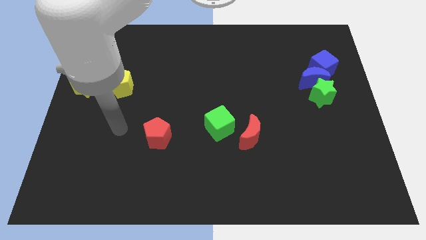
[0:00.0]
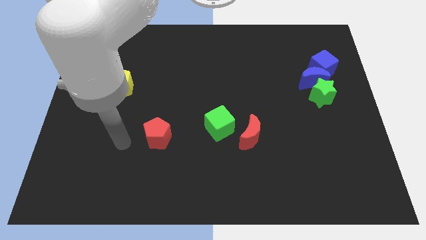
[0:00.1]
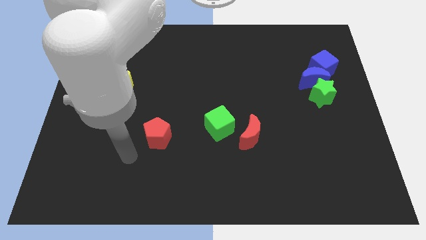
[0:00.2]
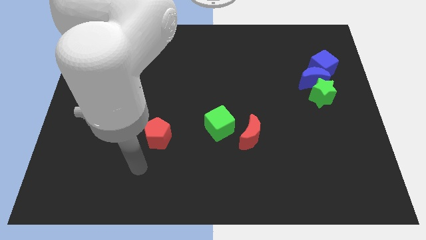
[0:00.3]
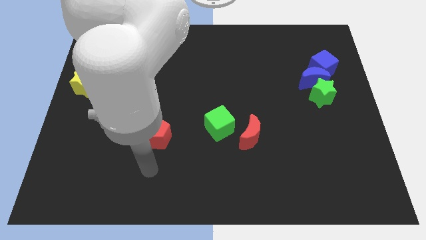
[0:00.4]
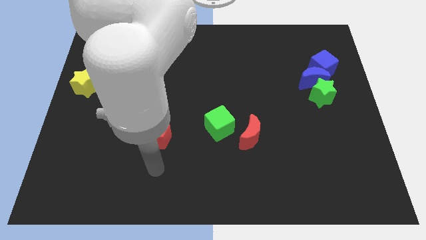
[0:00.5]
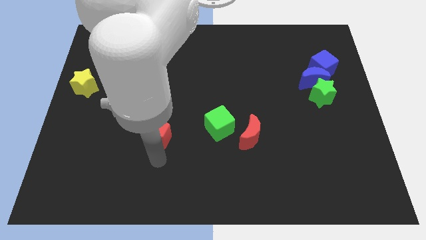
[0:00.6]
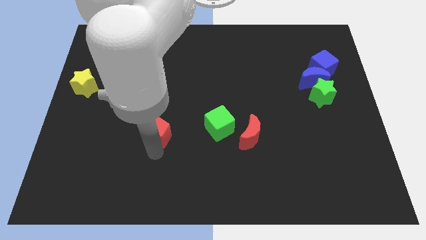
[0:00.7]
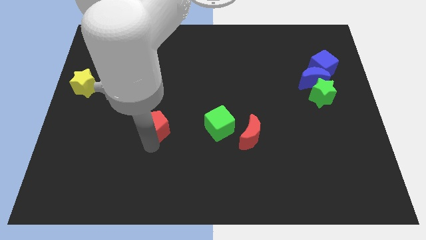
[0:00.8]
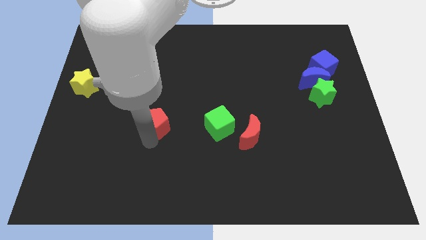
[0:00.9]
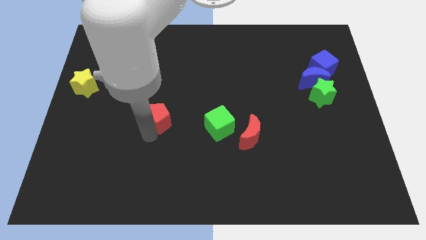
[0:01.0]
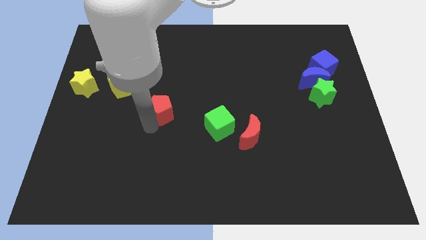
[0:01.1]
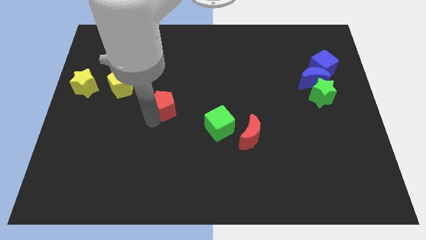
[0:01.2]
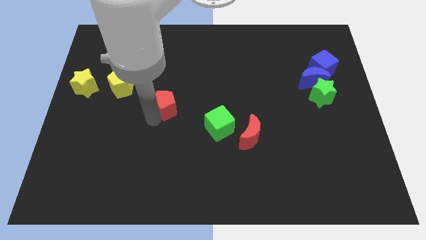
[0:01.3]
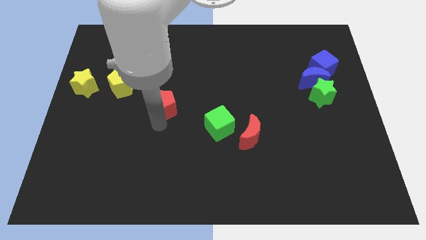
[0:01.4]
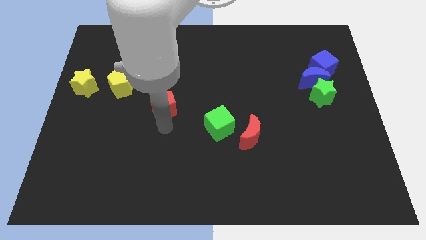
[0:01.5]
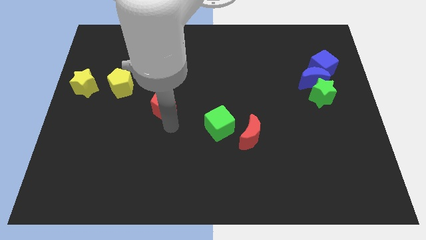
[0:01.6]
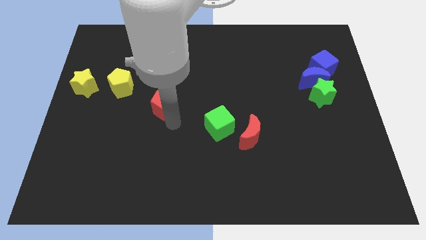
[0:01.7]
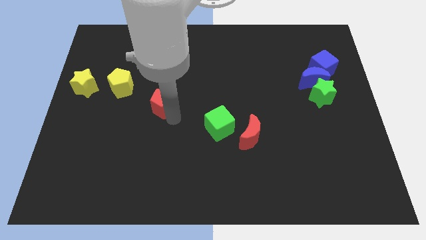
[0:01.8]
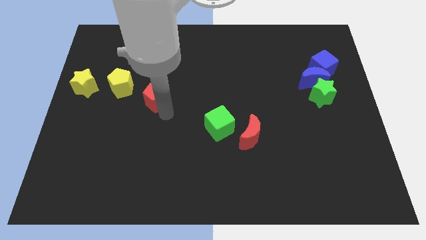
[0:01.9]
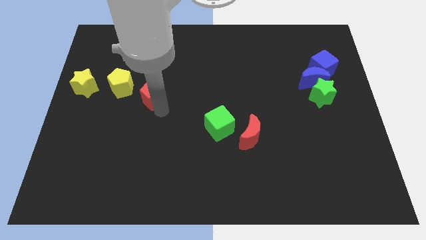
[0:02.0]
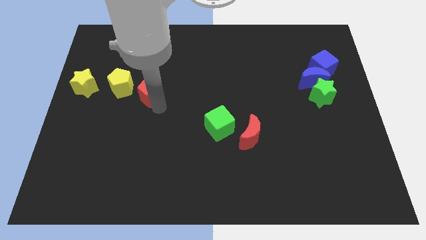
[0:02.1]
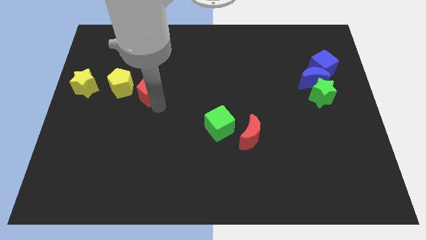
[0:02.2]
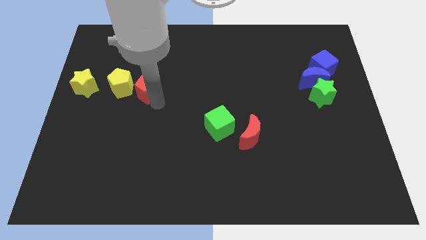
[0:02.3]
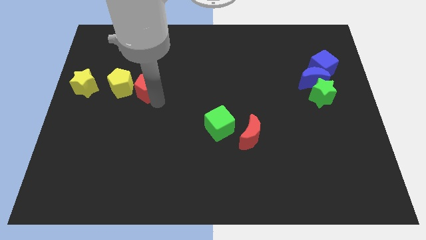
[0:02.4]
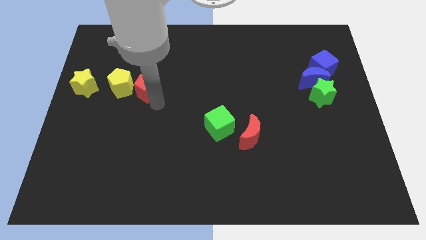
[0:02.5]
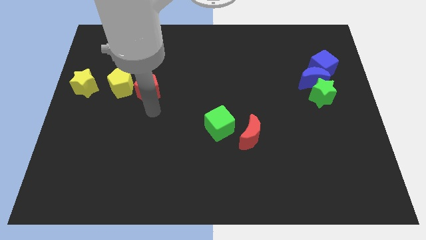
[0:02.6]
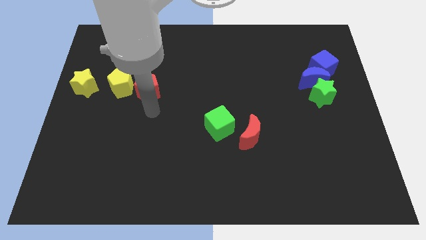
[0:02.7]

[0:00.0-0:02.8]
place red pentagon beside yellow pentagon

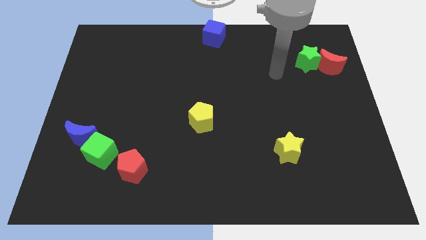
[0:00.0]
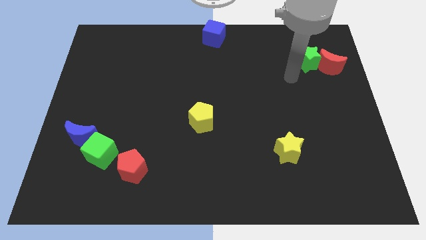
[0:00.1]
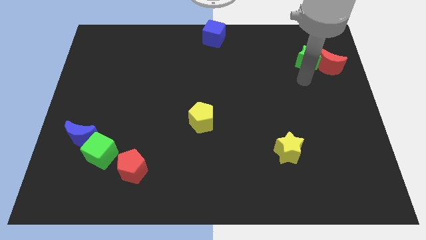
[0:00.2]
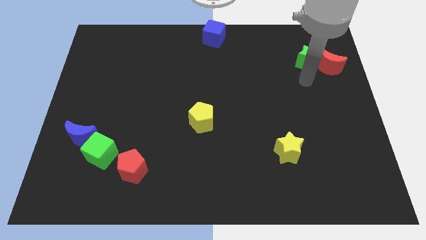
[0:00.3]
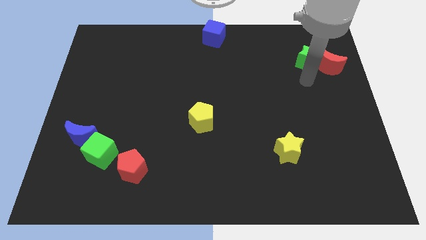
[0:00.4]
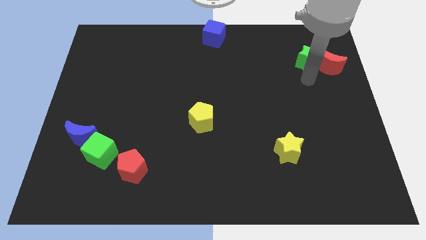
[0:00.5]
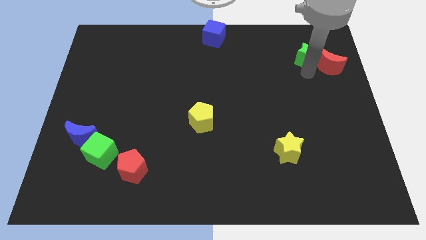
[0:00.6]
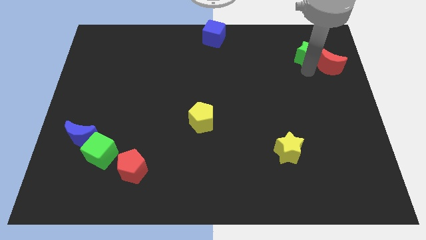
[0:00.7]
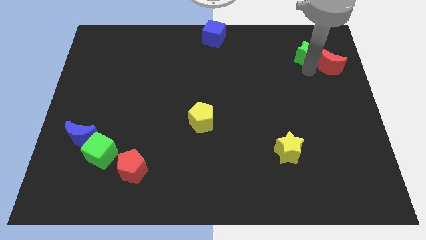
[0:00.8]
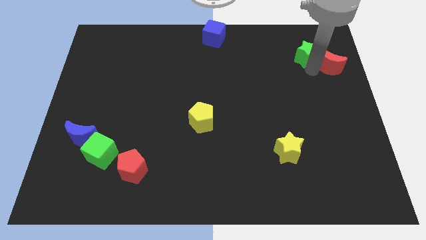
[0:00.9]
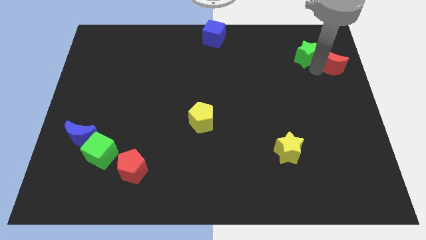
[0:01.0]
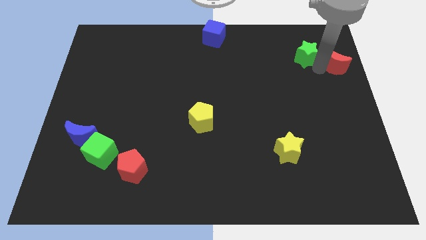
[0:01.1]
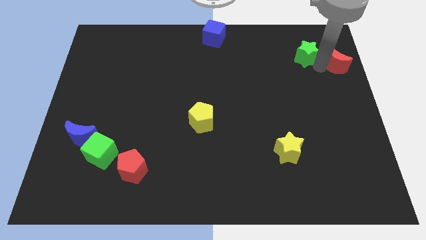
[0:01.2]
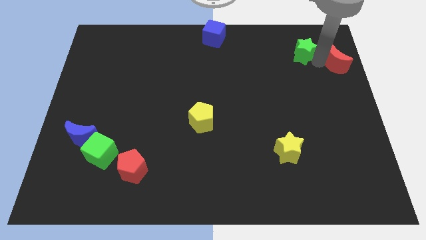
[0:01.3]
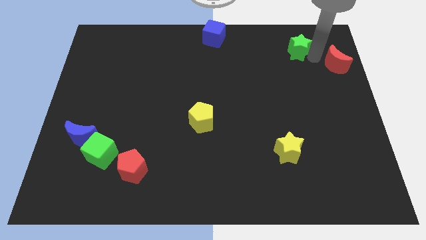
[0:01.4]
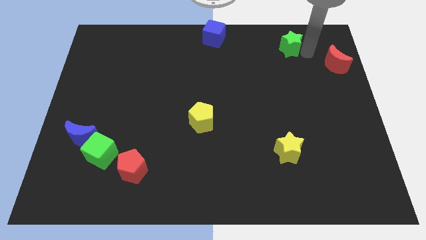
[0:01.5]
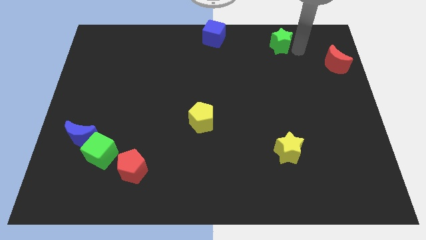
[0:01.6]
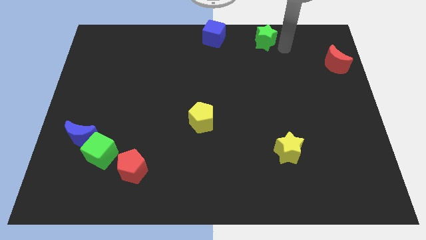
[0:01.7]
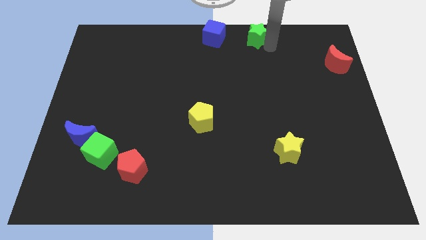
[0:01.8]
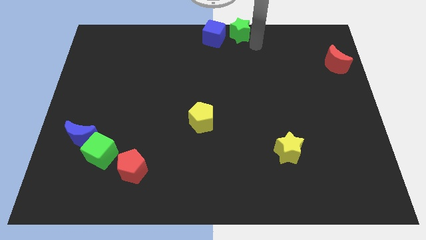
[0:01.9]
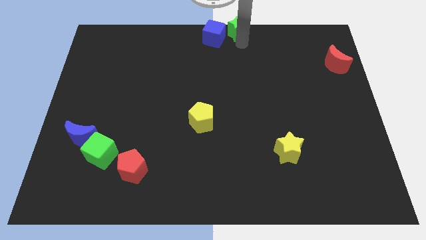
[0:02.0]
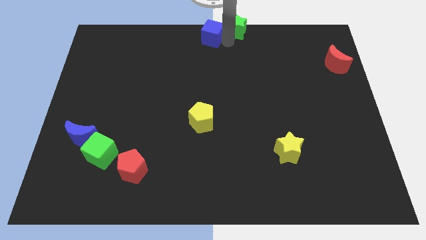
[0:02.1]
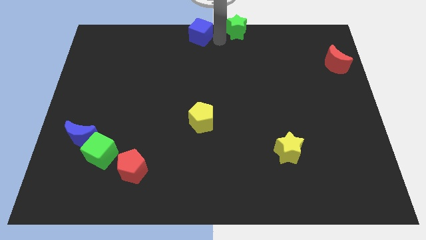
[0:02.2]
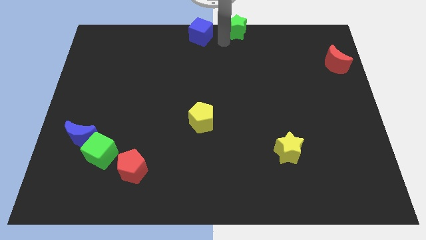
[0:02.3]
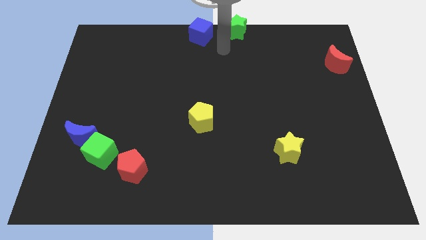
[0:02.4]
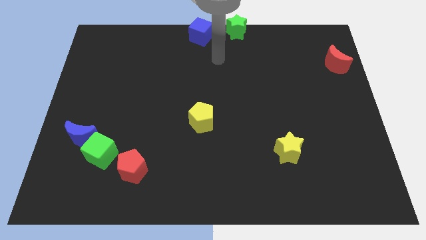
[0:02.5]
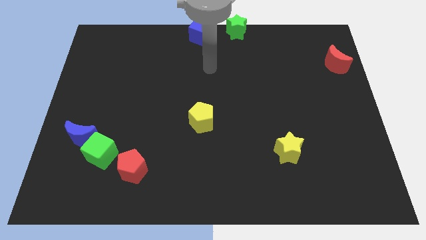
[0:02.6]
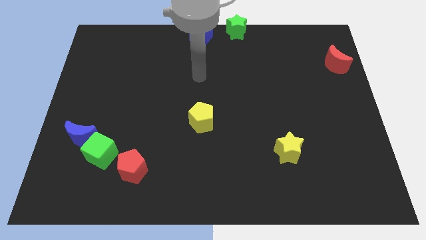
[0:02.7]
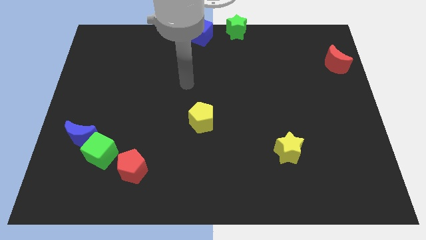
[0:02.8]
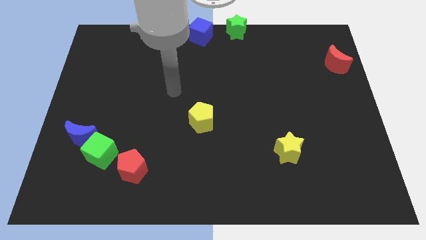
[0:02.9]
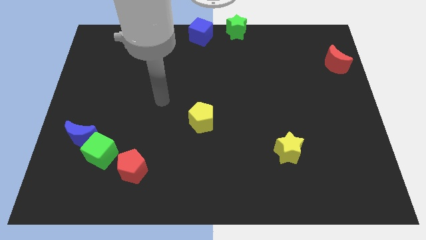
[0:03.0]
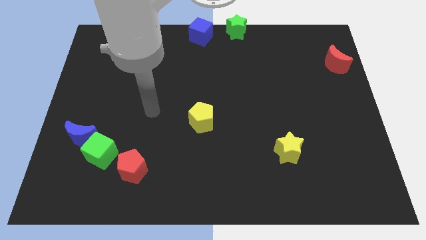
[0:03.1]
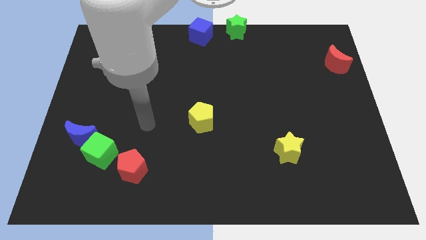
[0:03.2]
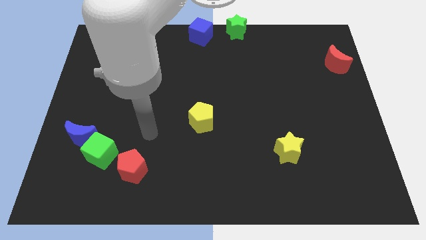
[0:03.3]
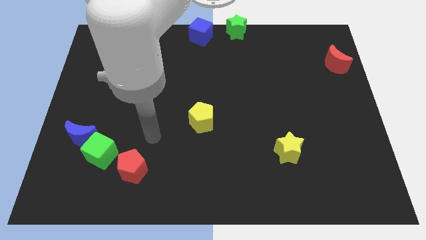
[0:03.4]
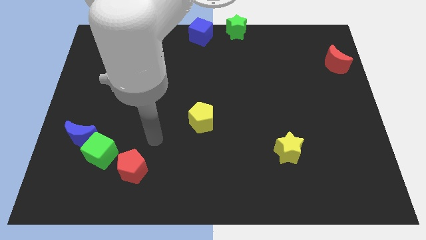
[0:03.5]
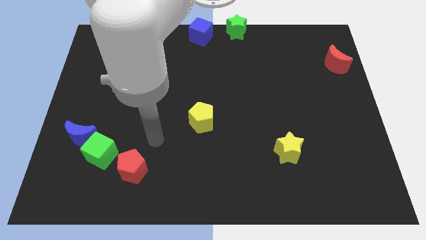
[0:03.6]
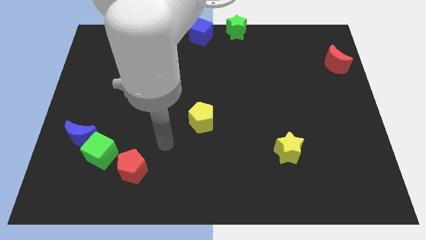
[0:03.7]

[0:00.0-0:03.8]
push the green star parallel right to the blue cube

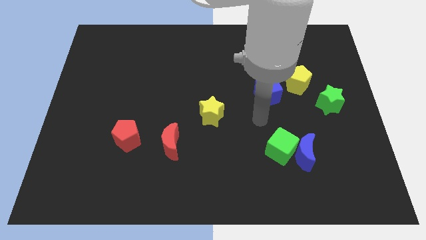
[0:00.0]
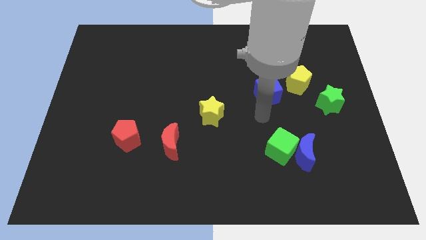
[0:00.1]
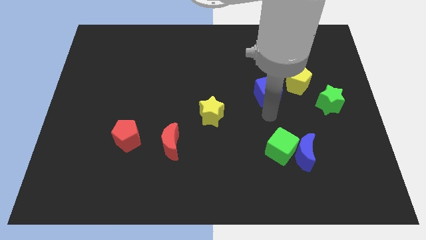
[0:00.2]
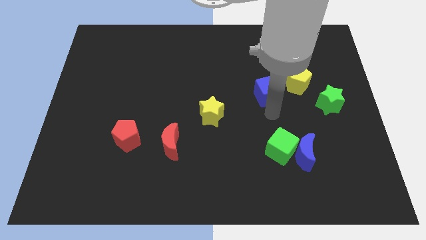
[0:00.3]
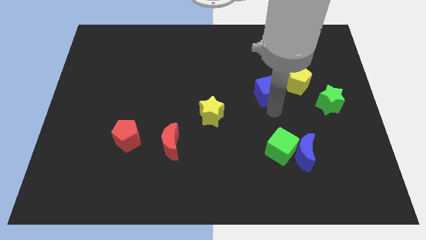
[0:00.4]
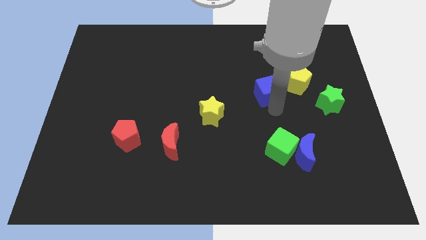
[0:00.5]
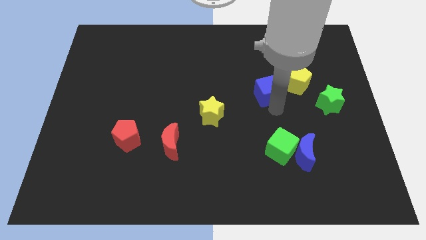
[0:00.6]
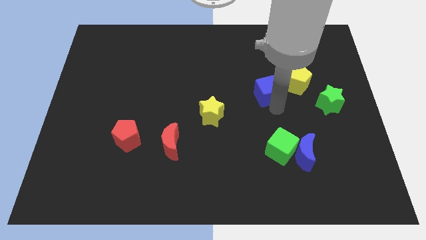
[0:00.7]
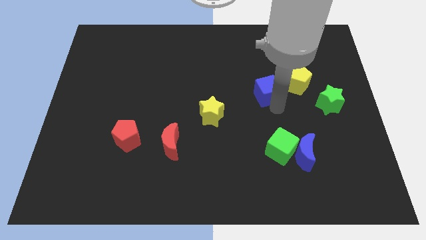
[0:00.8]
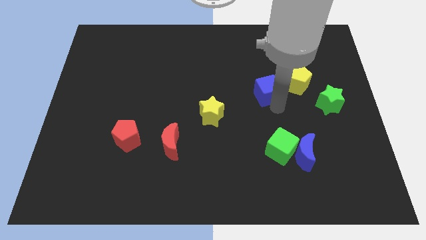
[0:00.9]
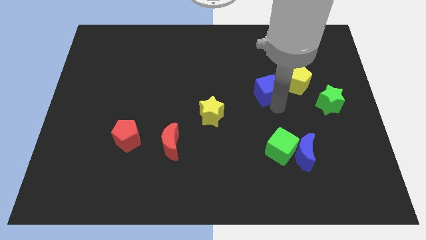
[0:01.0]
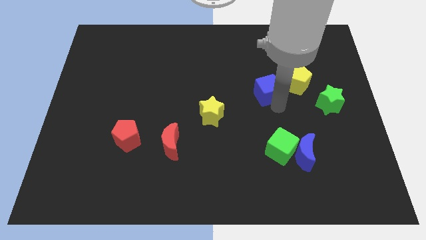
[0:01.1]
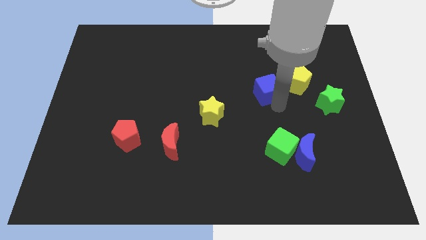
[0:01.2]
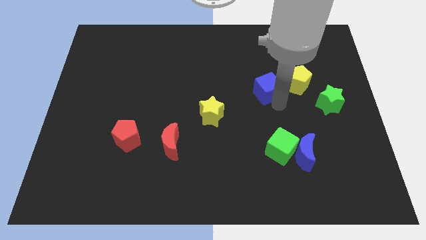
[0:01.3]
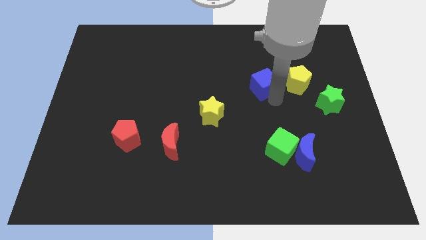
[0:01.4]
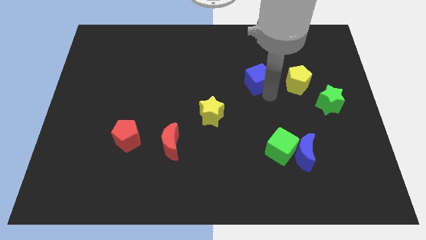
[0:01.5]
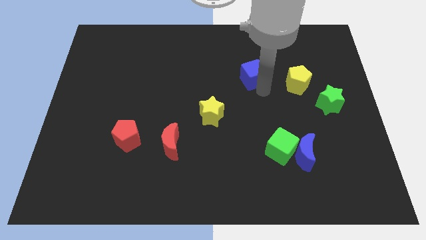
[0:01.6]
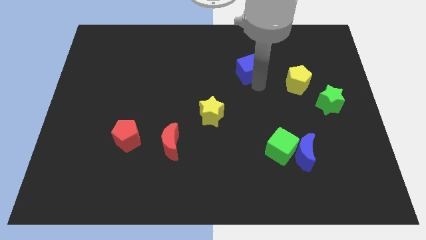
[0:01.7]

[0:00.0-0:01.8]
push blue cube to the left of yellow pentagon

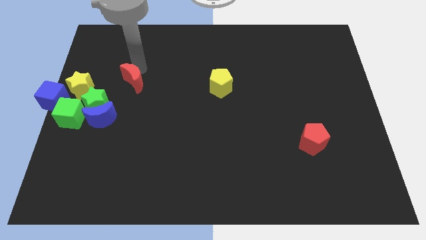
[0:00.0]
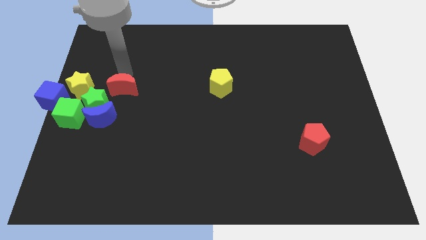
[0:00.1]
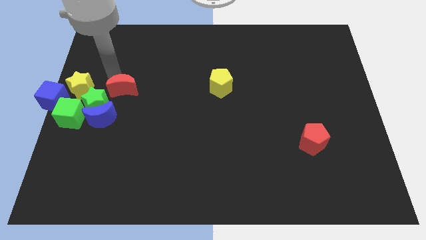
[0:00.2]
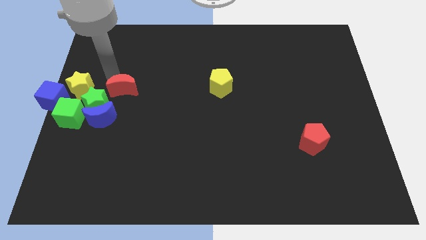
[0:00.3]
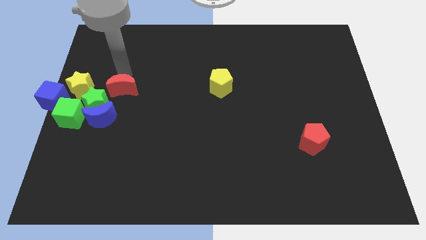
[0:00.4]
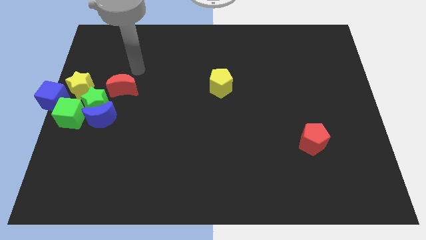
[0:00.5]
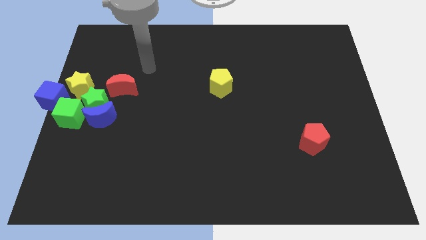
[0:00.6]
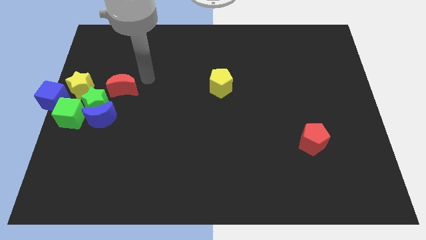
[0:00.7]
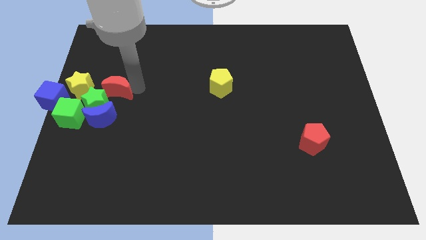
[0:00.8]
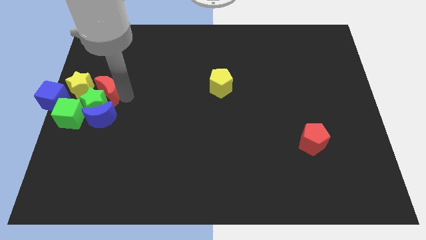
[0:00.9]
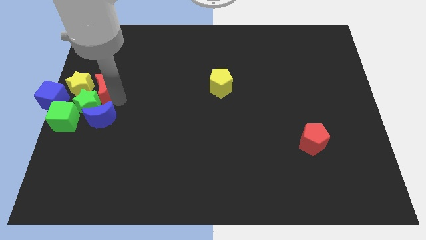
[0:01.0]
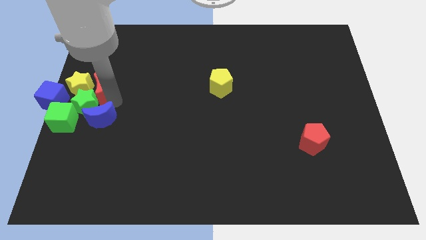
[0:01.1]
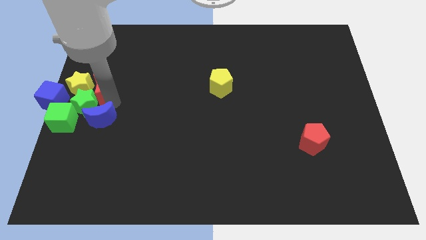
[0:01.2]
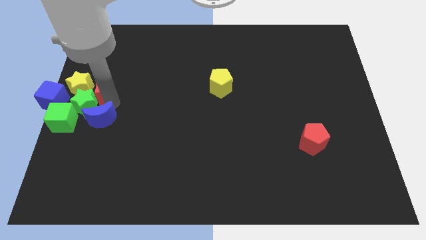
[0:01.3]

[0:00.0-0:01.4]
push the red moon into the group of the objects
